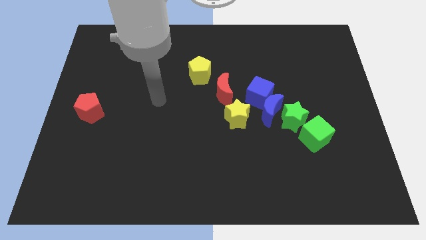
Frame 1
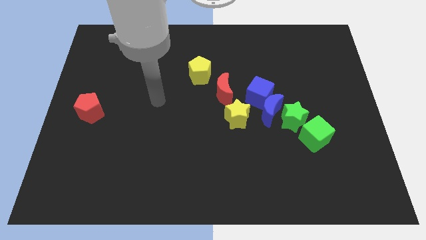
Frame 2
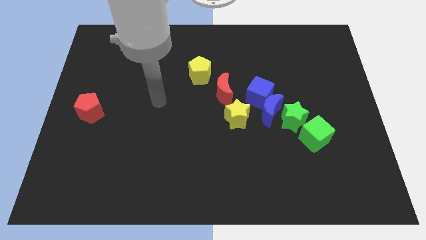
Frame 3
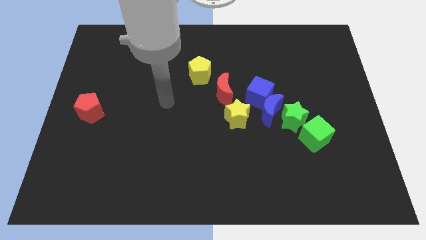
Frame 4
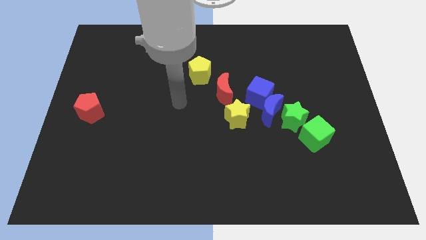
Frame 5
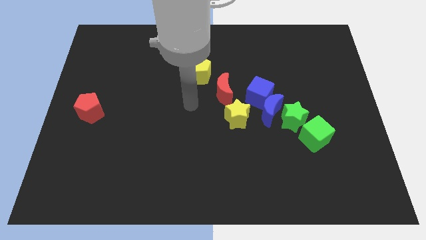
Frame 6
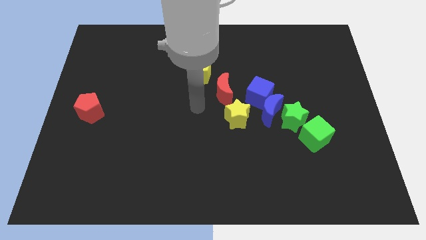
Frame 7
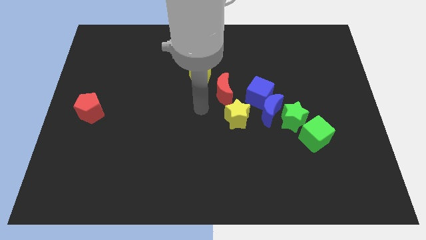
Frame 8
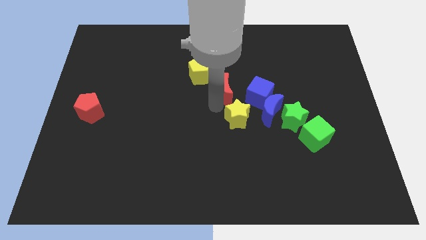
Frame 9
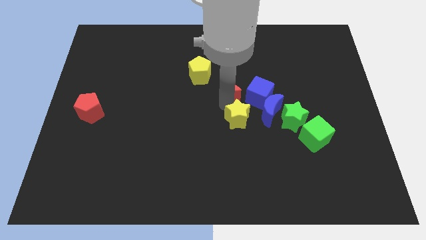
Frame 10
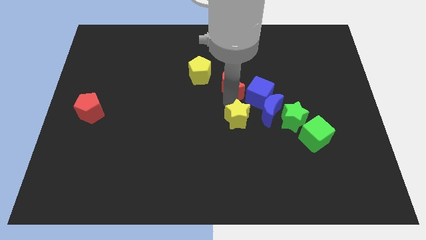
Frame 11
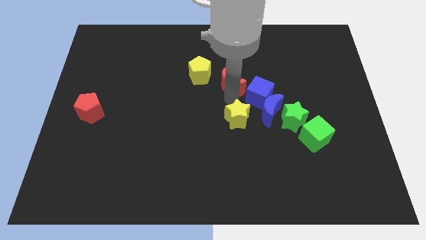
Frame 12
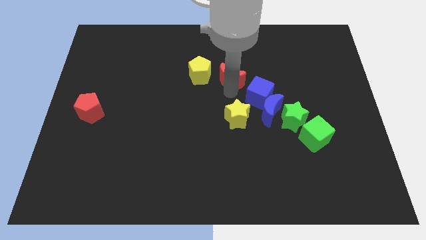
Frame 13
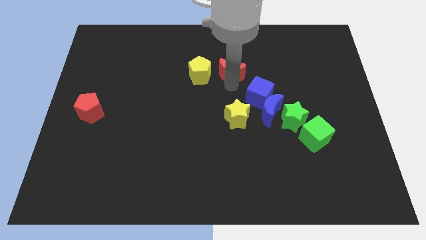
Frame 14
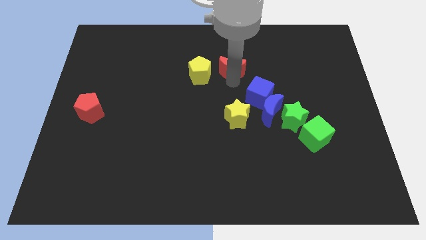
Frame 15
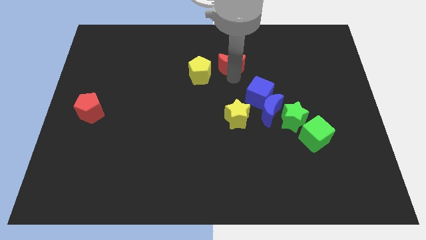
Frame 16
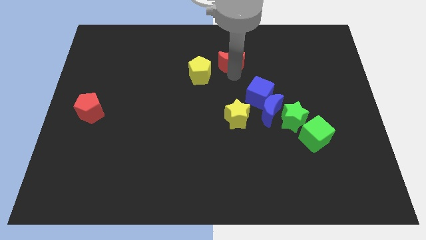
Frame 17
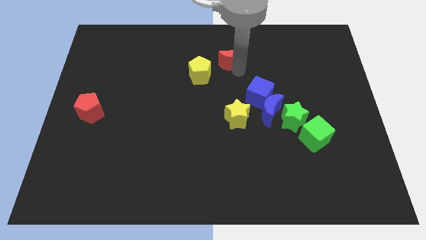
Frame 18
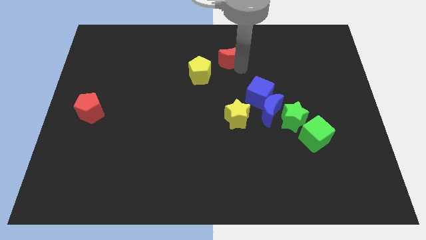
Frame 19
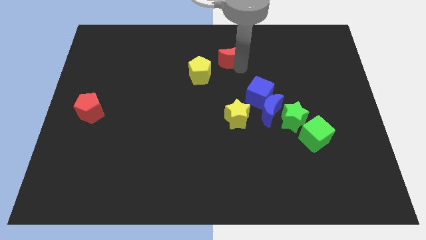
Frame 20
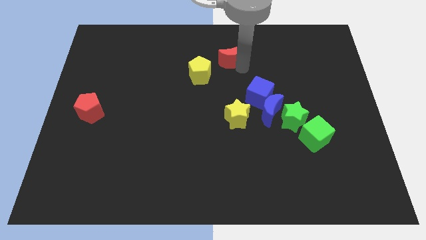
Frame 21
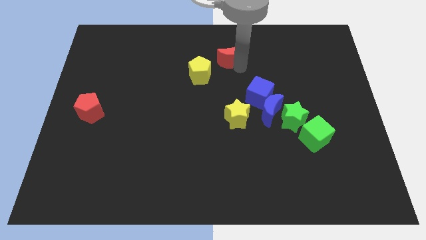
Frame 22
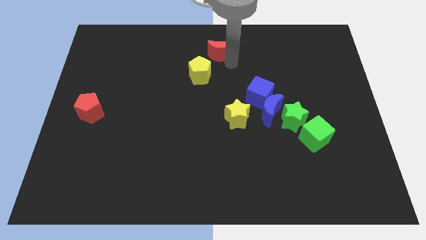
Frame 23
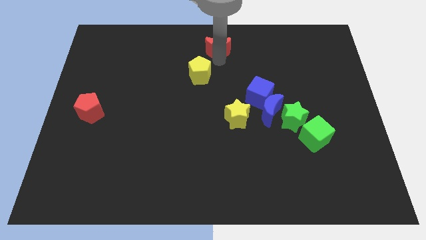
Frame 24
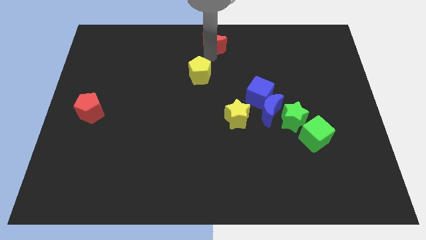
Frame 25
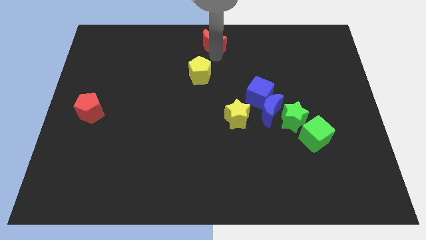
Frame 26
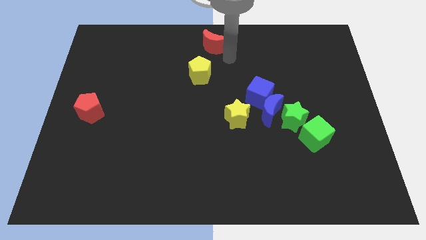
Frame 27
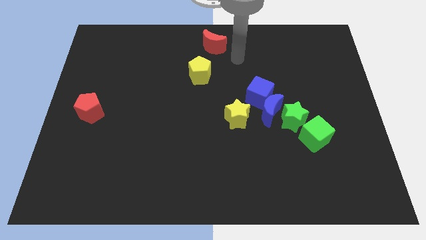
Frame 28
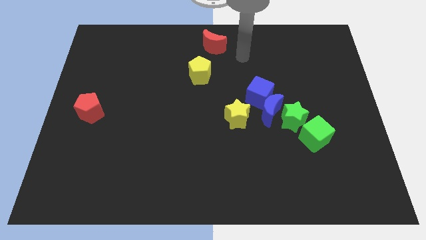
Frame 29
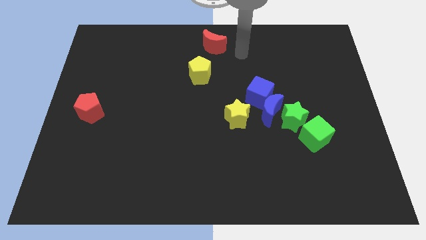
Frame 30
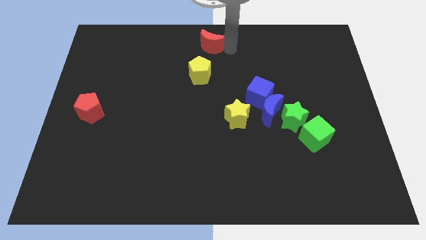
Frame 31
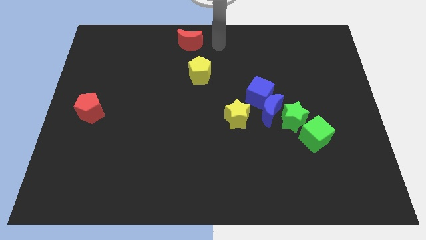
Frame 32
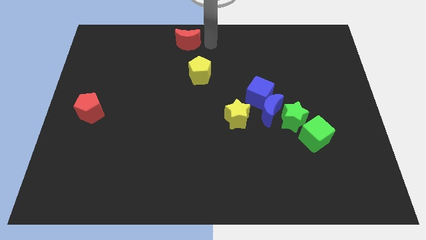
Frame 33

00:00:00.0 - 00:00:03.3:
move the red crescent to the top center of the board

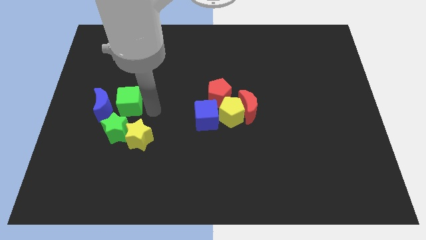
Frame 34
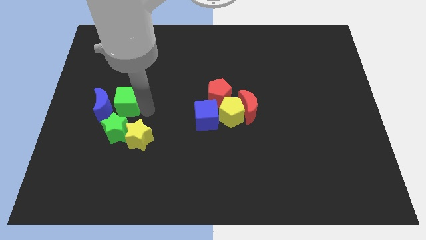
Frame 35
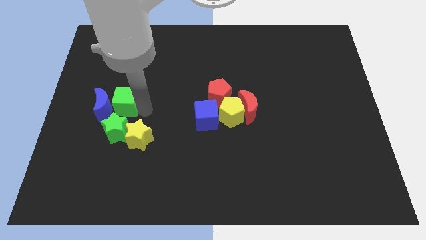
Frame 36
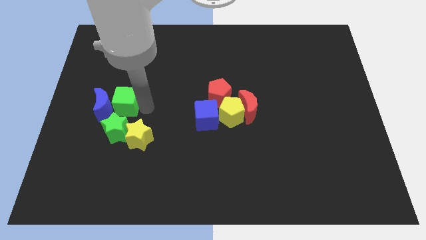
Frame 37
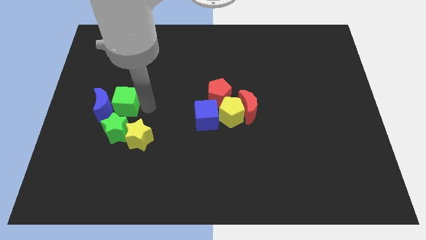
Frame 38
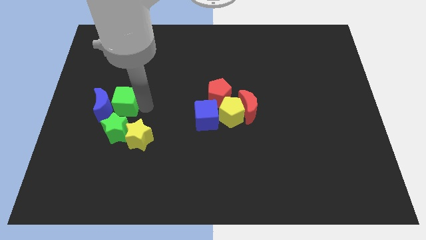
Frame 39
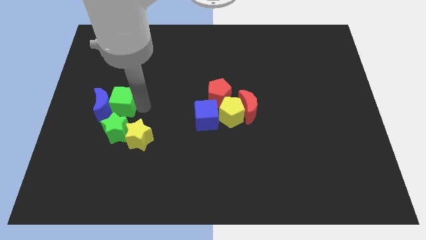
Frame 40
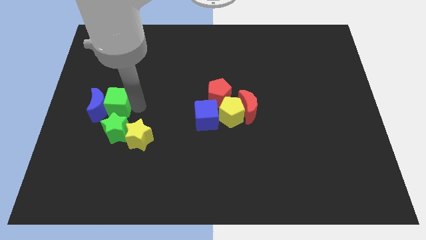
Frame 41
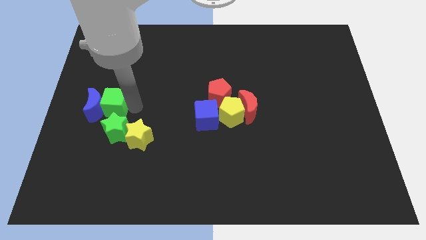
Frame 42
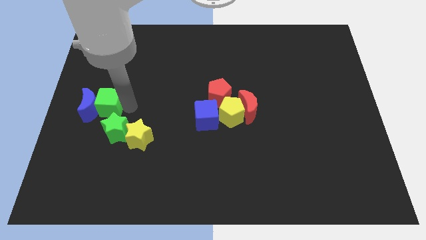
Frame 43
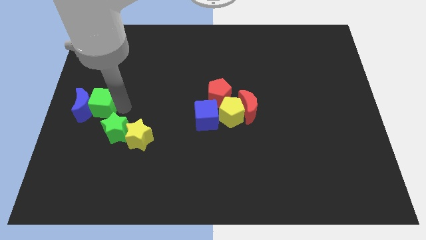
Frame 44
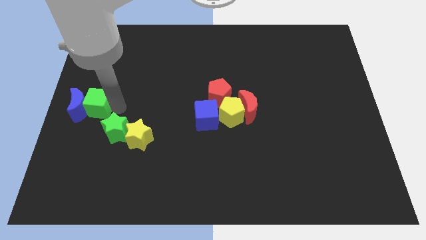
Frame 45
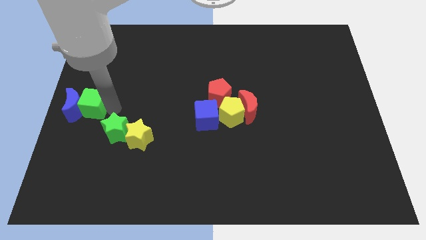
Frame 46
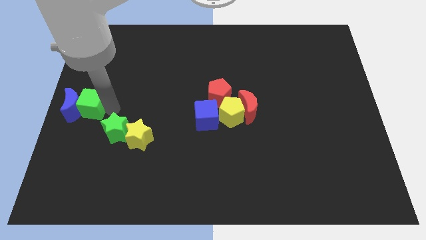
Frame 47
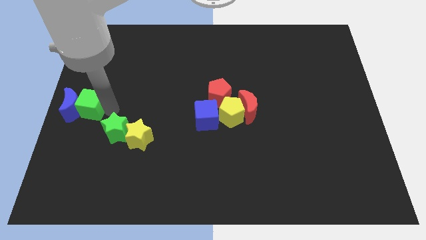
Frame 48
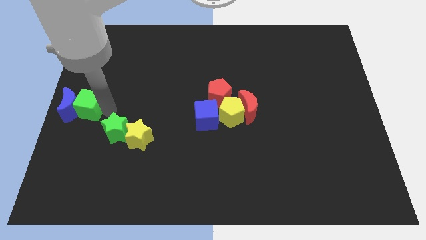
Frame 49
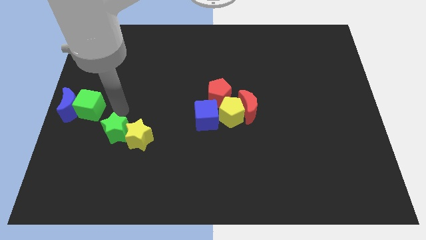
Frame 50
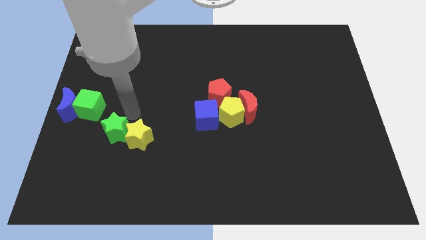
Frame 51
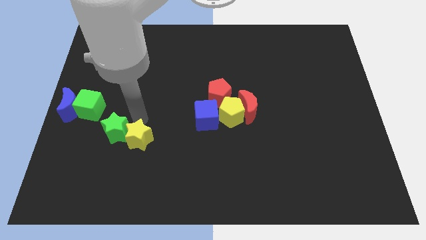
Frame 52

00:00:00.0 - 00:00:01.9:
move the green cube and the blue moon to the left center of the board

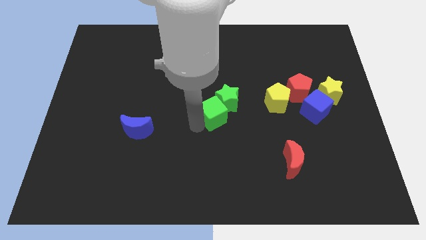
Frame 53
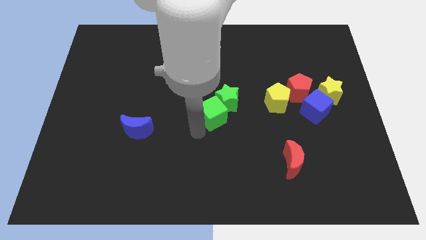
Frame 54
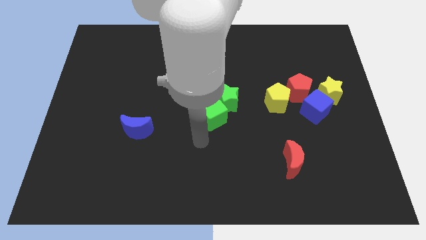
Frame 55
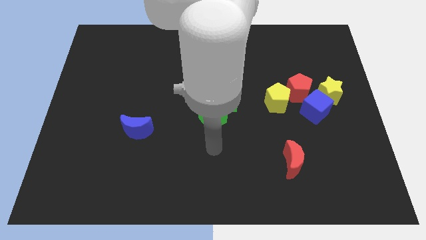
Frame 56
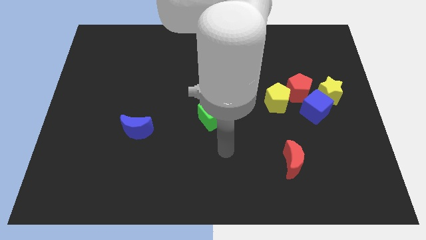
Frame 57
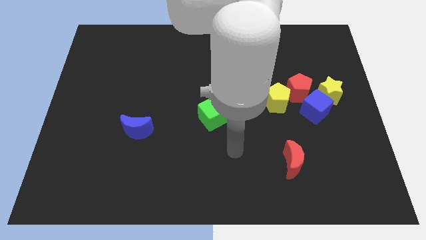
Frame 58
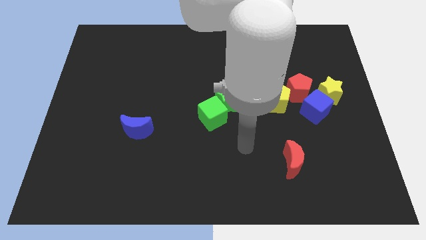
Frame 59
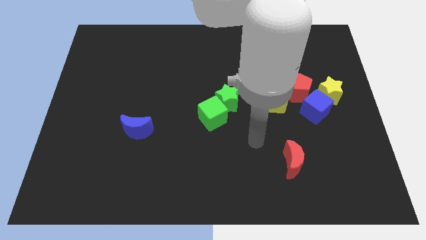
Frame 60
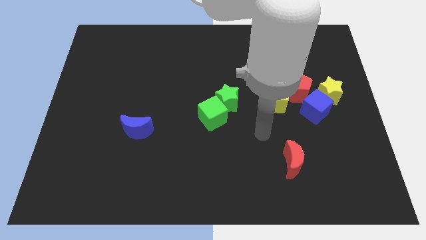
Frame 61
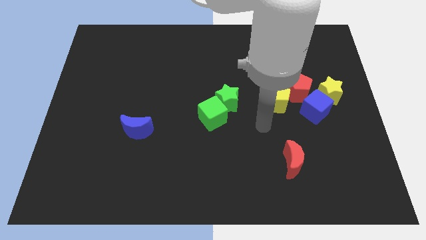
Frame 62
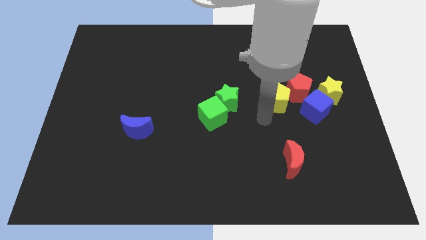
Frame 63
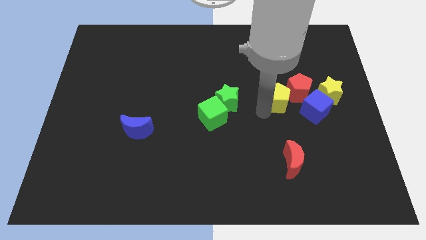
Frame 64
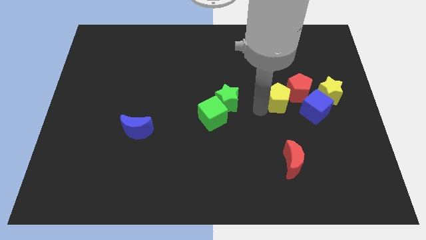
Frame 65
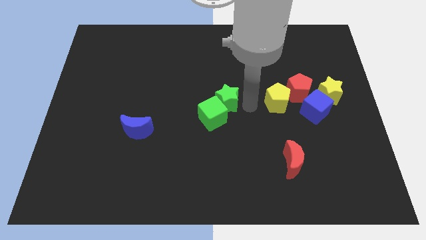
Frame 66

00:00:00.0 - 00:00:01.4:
place your arm in between the green star and yellow pentagon

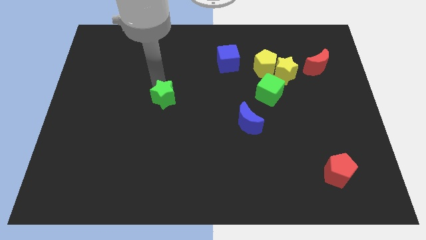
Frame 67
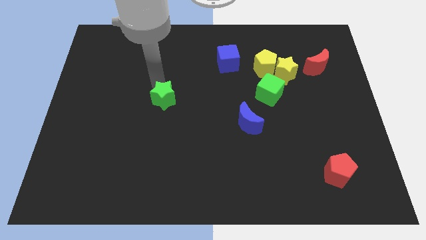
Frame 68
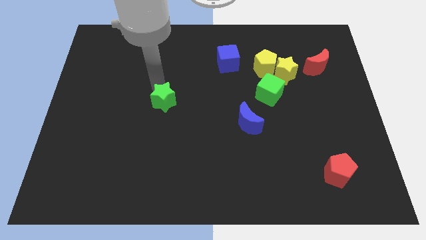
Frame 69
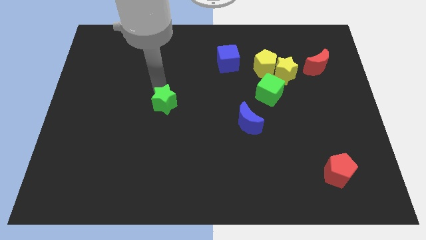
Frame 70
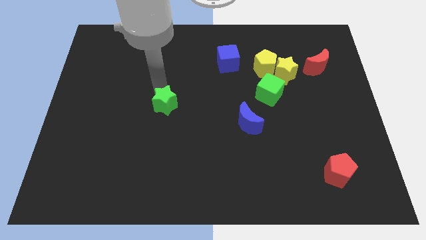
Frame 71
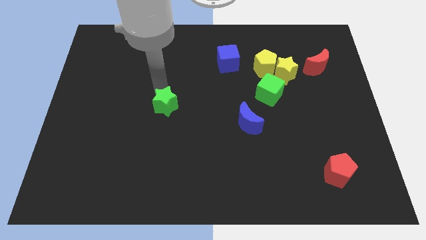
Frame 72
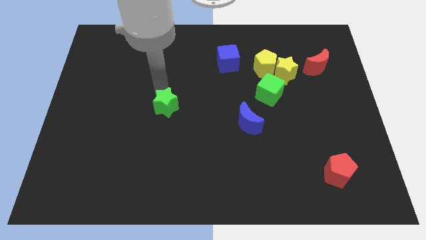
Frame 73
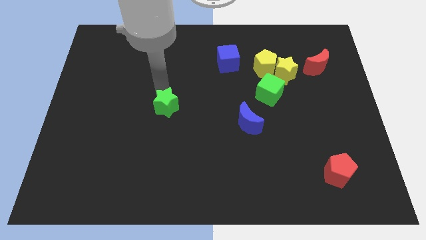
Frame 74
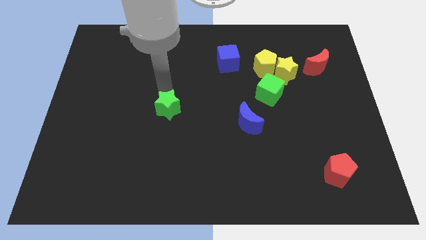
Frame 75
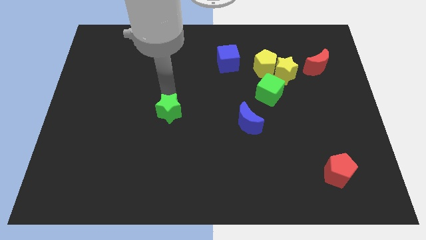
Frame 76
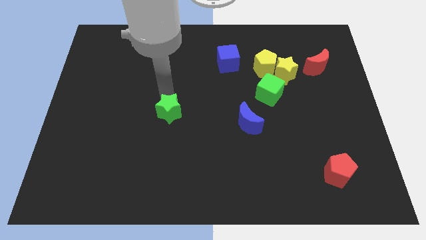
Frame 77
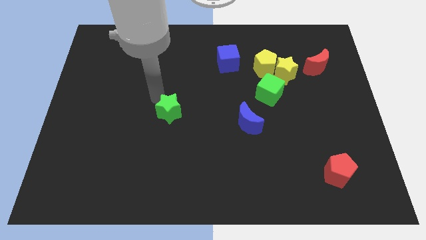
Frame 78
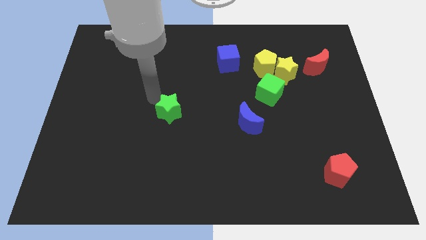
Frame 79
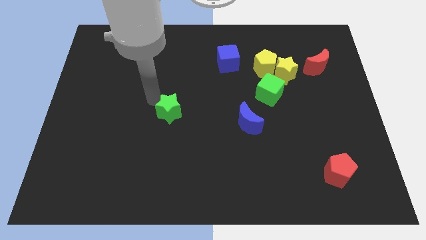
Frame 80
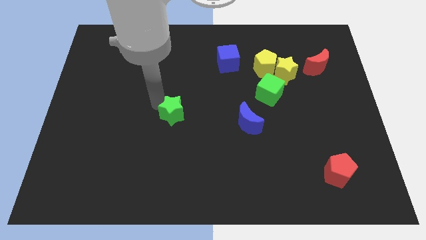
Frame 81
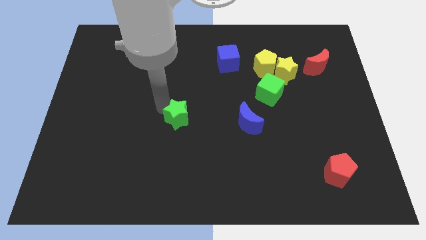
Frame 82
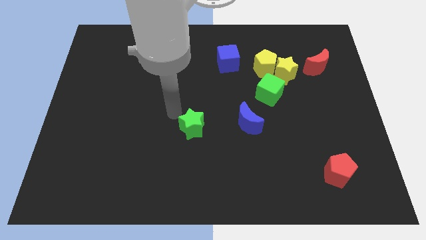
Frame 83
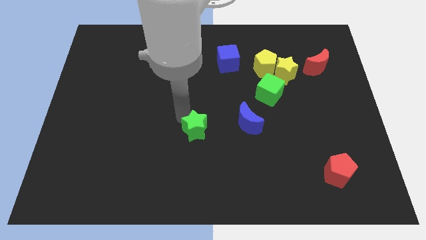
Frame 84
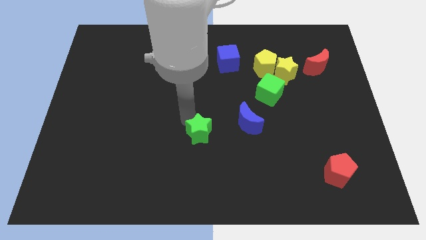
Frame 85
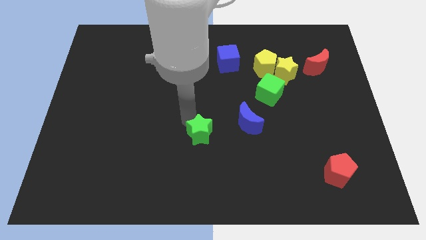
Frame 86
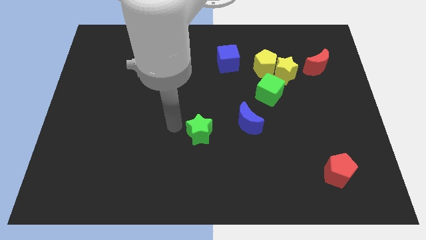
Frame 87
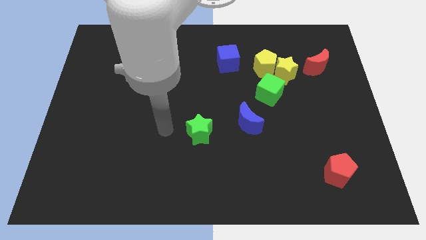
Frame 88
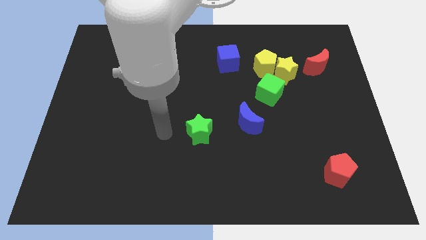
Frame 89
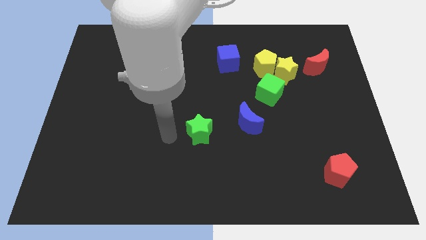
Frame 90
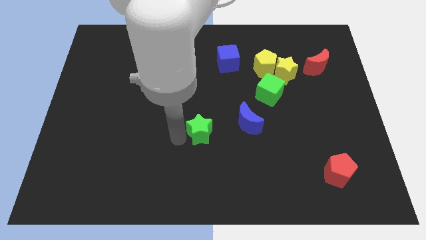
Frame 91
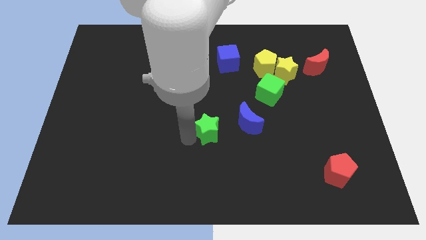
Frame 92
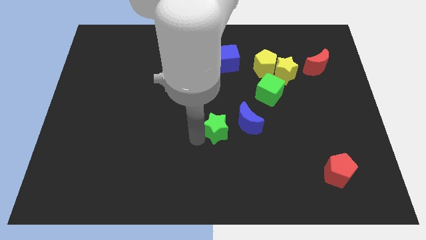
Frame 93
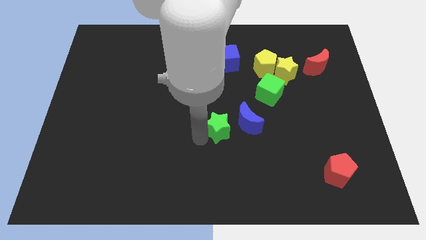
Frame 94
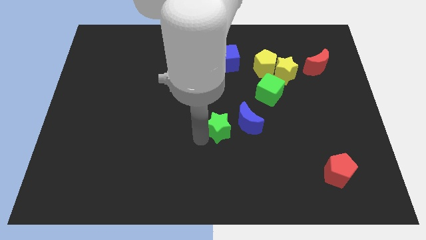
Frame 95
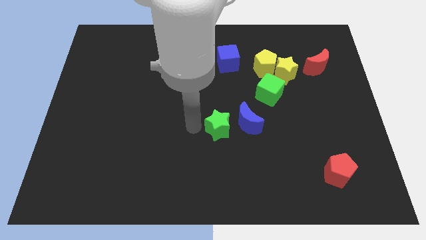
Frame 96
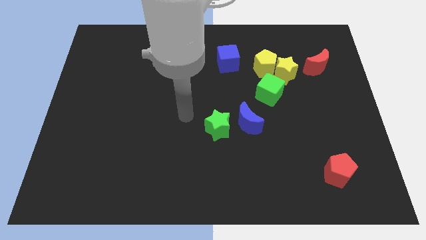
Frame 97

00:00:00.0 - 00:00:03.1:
push the green star towards the bottom
